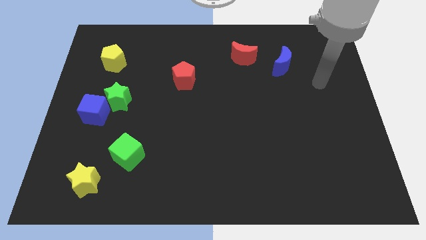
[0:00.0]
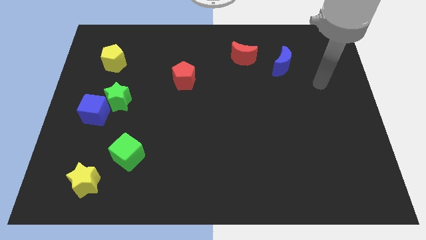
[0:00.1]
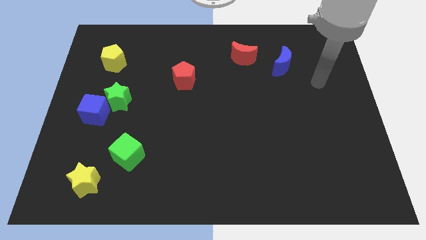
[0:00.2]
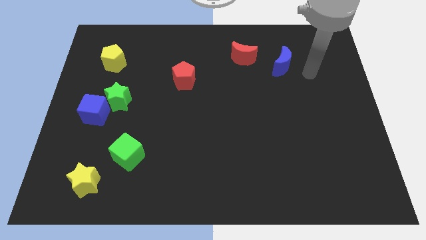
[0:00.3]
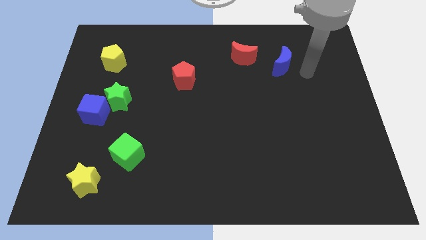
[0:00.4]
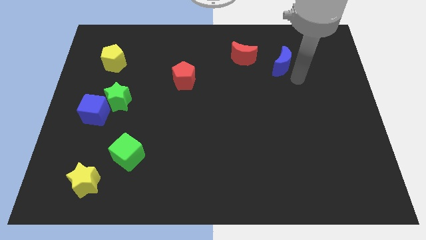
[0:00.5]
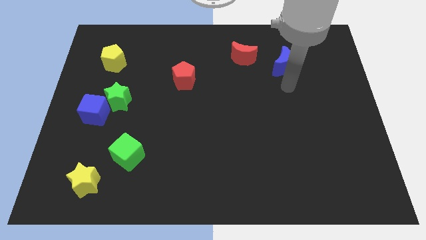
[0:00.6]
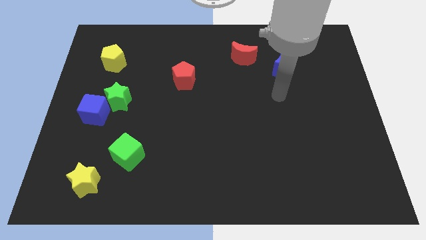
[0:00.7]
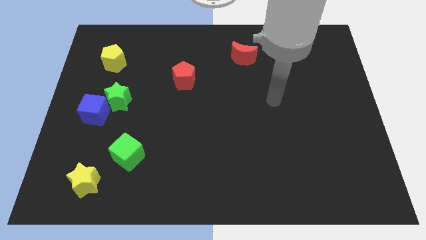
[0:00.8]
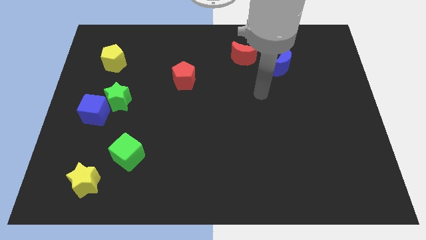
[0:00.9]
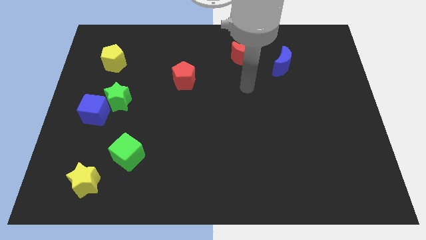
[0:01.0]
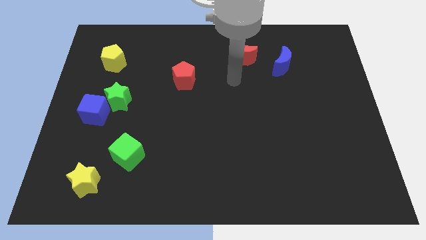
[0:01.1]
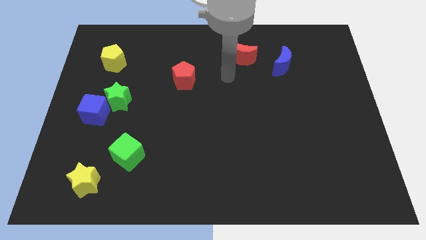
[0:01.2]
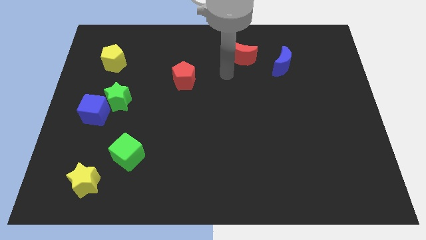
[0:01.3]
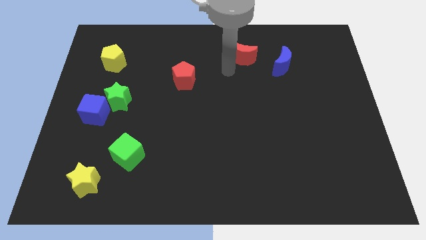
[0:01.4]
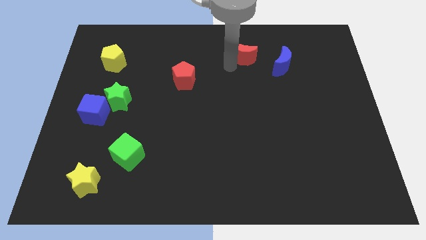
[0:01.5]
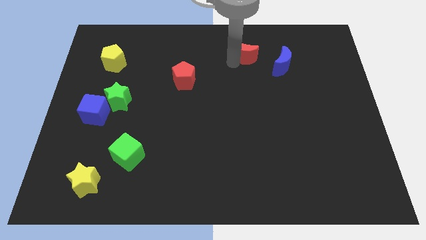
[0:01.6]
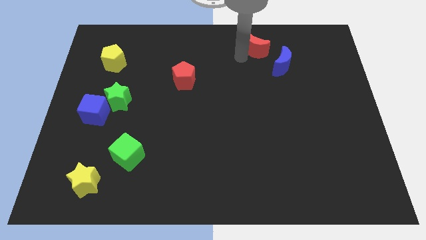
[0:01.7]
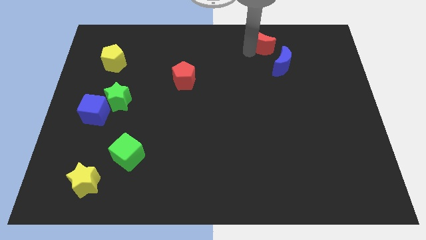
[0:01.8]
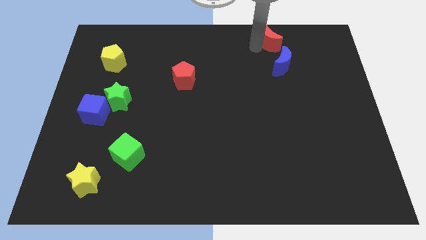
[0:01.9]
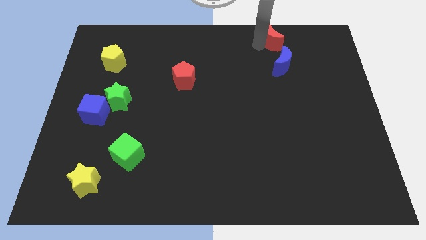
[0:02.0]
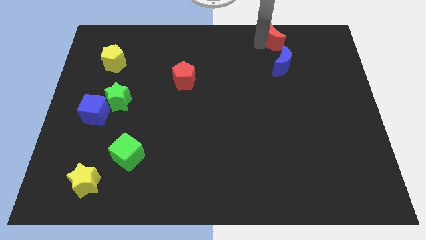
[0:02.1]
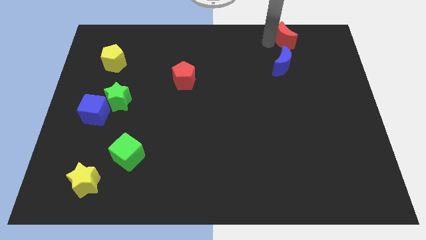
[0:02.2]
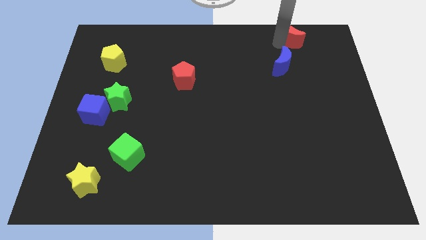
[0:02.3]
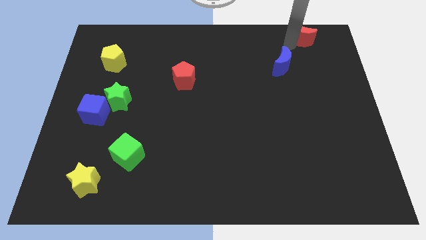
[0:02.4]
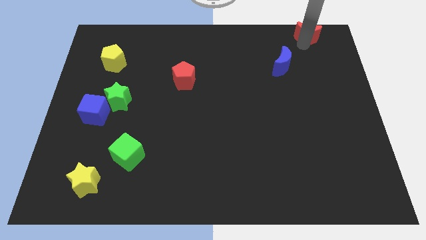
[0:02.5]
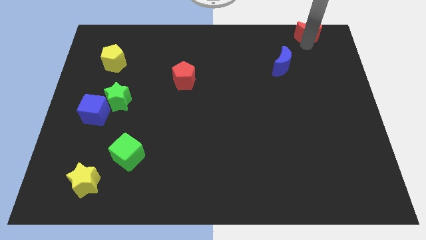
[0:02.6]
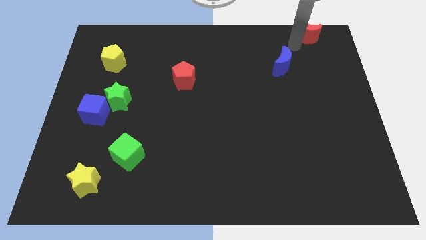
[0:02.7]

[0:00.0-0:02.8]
push the red moon near to the top right side of the blue moon

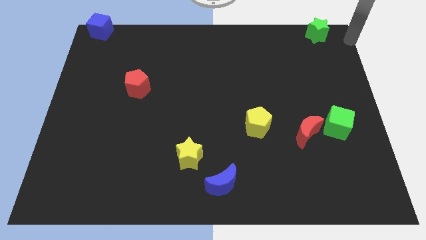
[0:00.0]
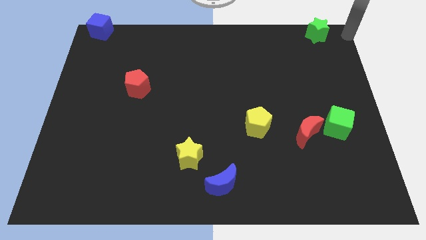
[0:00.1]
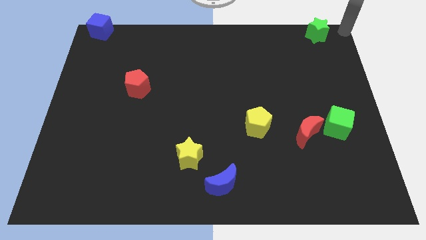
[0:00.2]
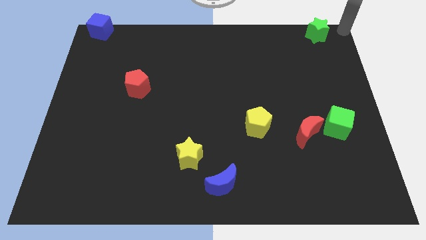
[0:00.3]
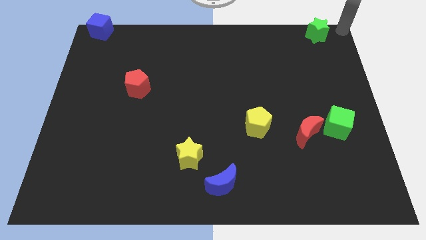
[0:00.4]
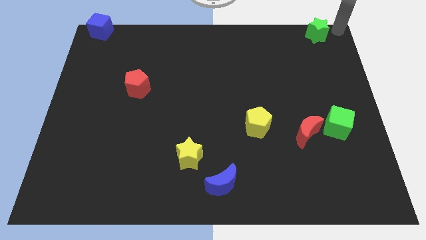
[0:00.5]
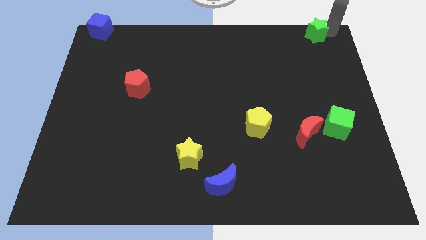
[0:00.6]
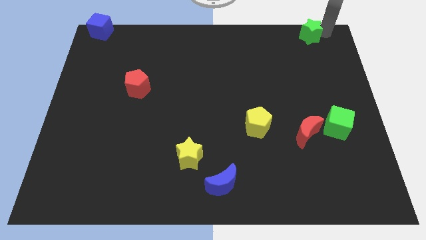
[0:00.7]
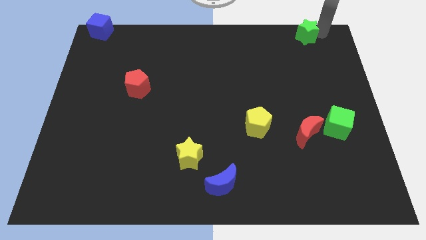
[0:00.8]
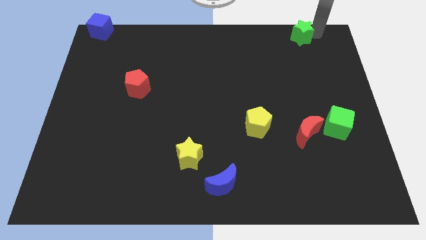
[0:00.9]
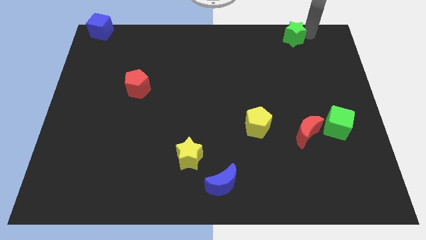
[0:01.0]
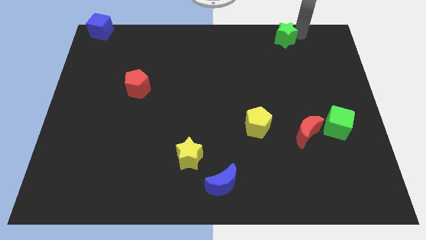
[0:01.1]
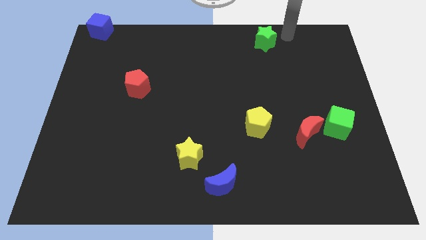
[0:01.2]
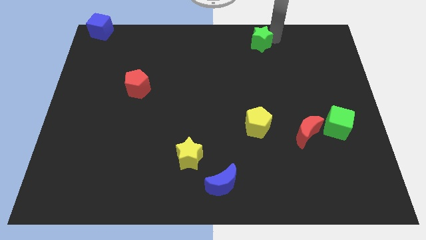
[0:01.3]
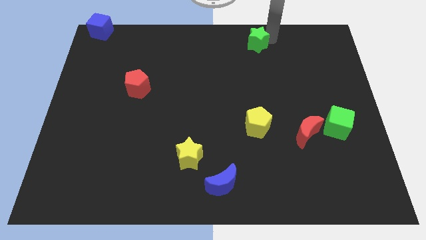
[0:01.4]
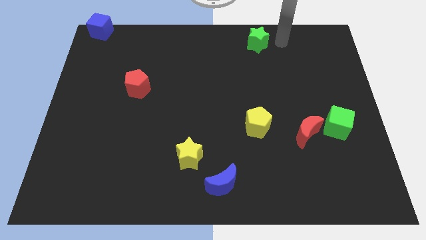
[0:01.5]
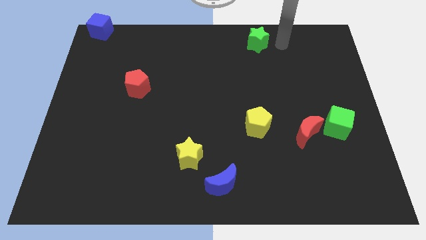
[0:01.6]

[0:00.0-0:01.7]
push green star above yellow pentagon

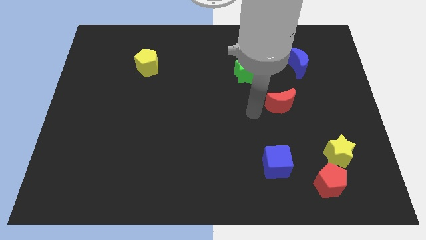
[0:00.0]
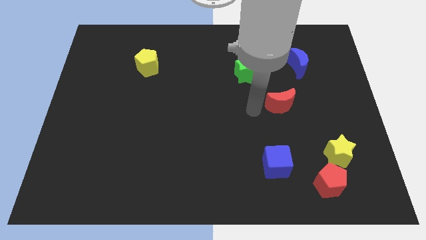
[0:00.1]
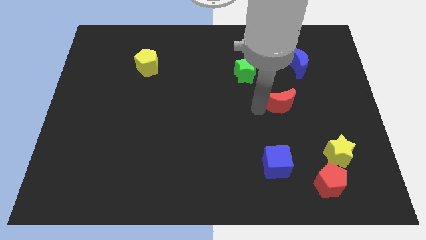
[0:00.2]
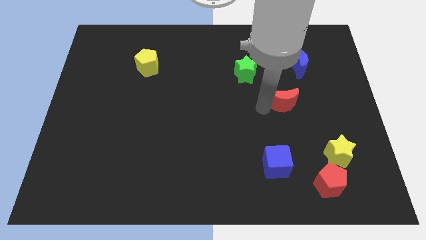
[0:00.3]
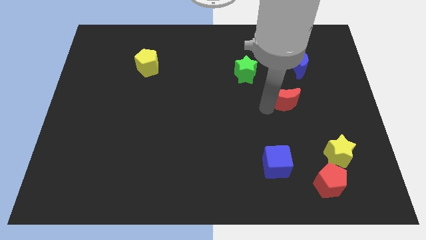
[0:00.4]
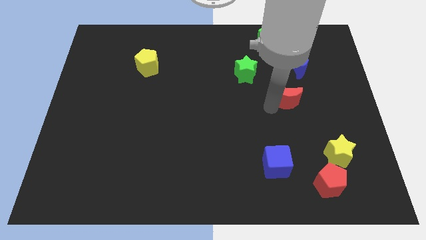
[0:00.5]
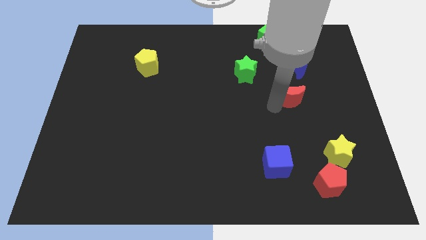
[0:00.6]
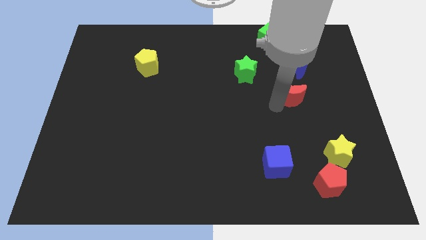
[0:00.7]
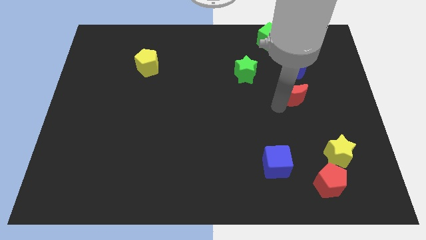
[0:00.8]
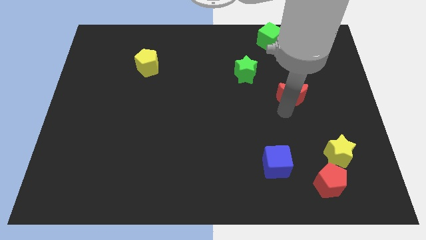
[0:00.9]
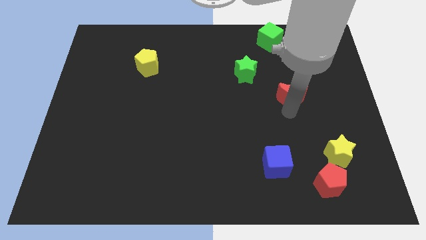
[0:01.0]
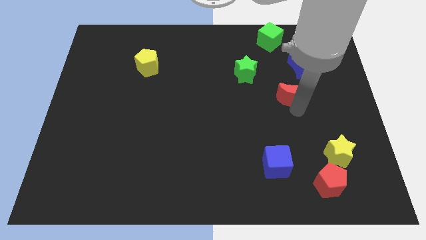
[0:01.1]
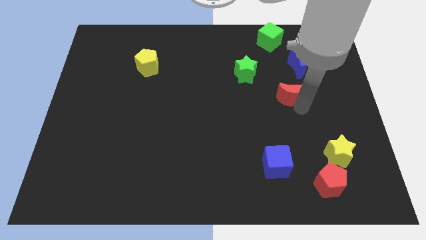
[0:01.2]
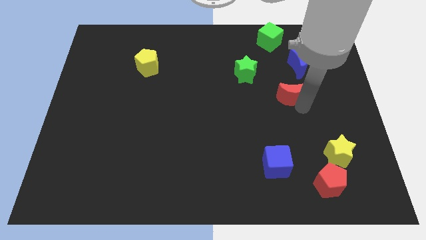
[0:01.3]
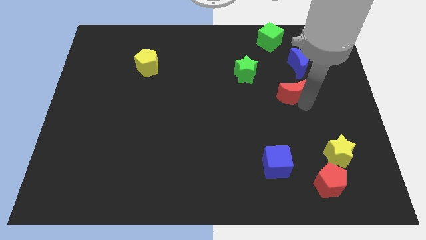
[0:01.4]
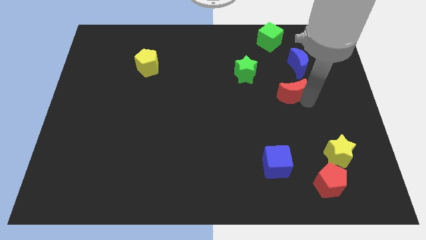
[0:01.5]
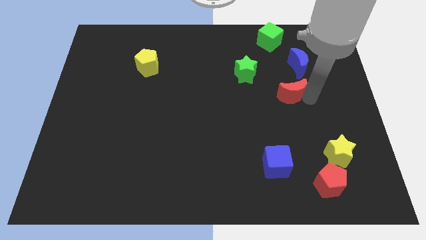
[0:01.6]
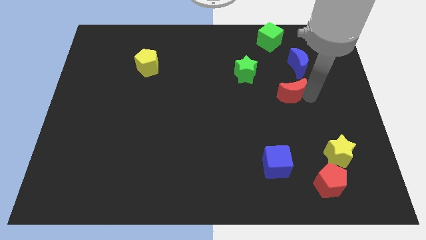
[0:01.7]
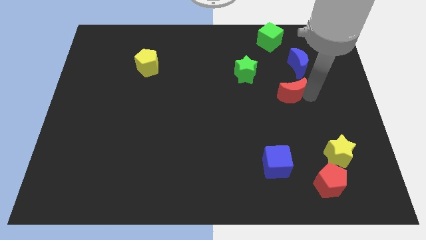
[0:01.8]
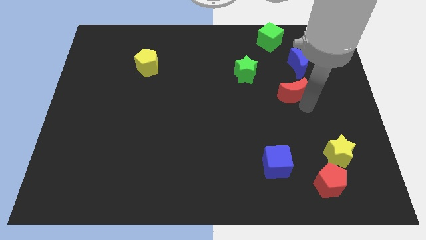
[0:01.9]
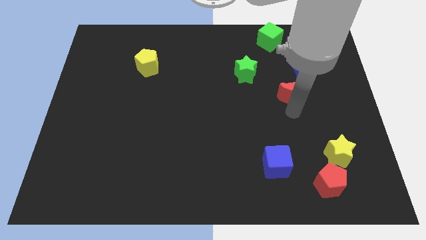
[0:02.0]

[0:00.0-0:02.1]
move the red moon near to the blue moon

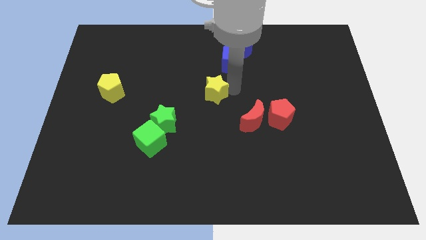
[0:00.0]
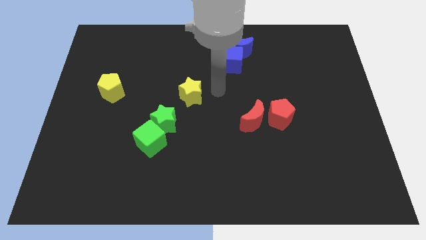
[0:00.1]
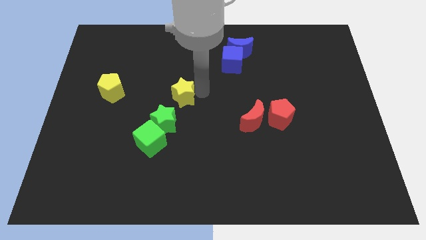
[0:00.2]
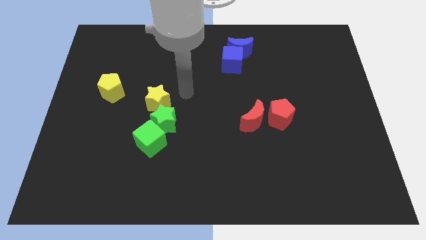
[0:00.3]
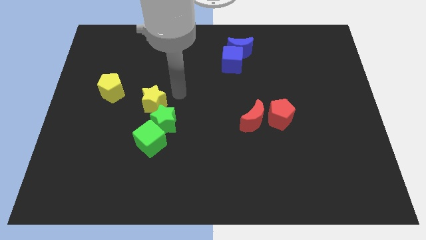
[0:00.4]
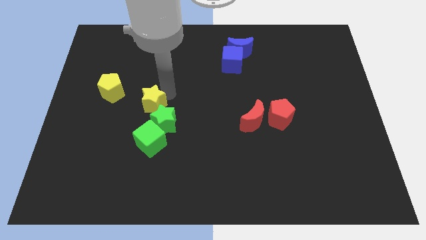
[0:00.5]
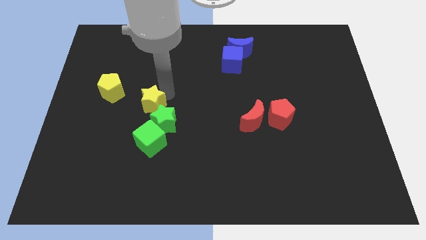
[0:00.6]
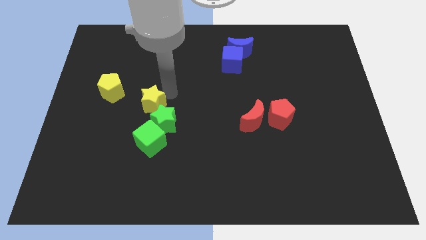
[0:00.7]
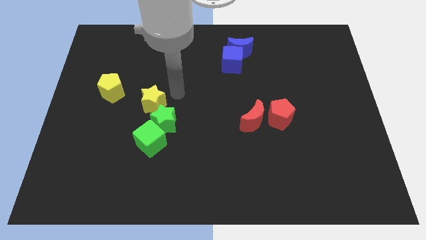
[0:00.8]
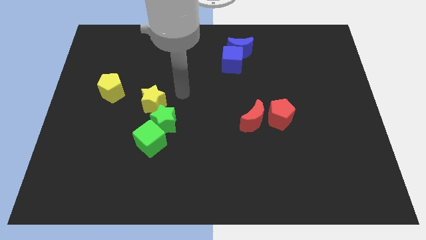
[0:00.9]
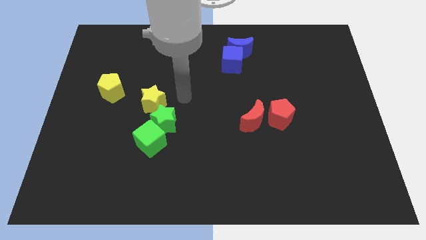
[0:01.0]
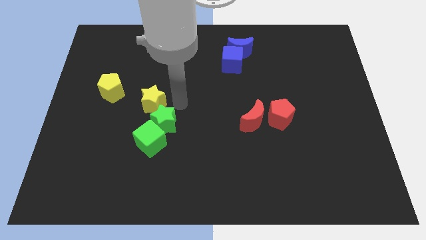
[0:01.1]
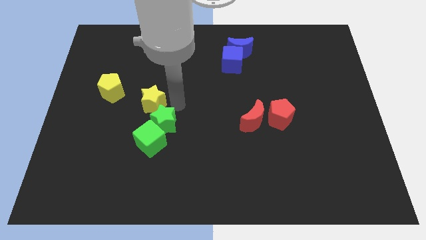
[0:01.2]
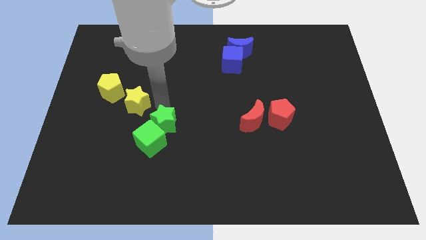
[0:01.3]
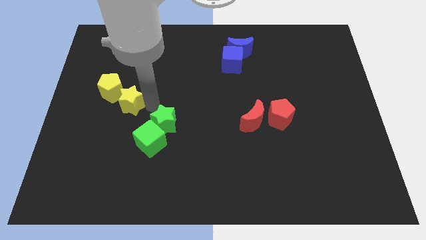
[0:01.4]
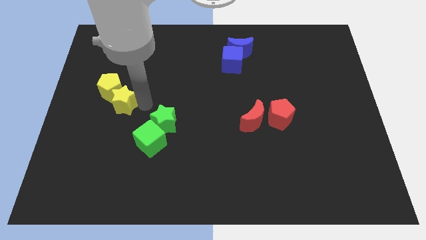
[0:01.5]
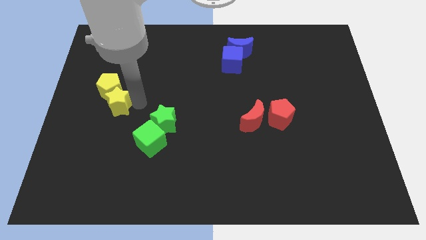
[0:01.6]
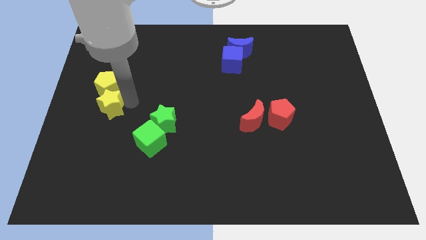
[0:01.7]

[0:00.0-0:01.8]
push the yellow star into the yellow pentagon

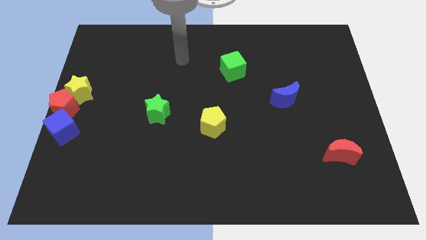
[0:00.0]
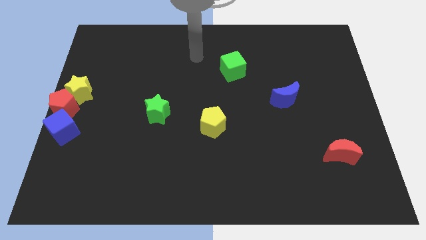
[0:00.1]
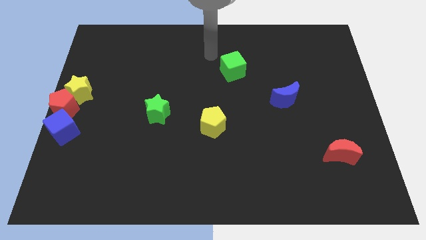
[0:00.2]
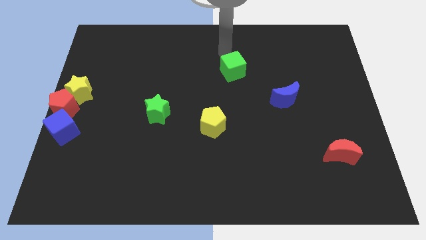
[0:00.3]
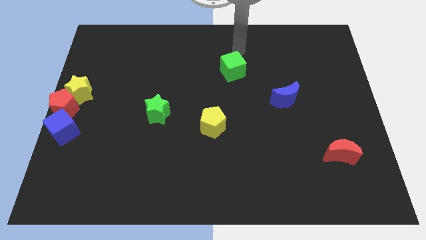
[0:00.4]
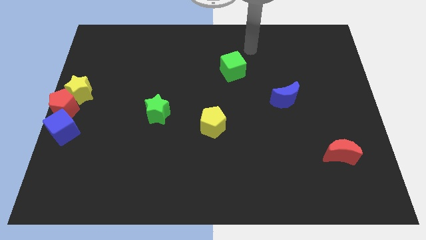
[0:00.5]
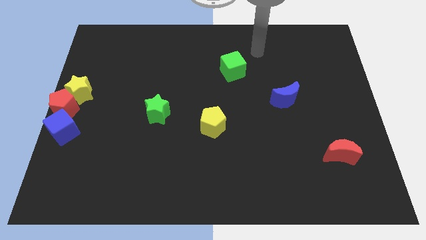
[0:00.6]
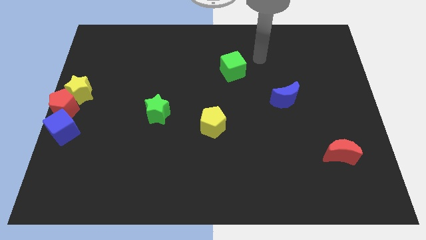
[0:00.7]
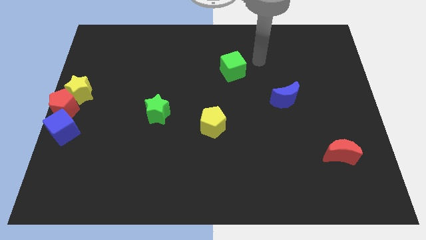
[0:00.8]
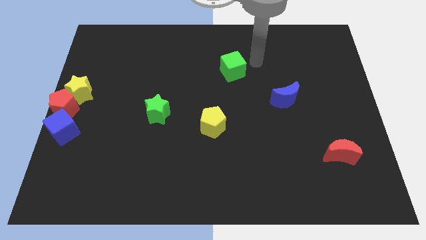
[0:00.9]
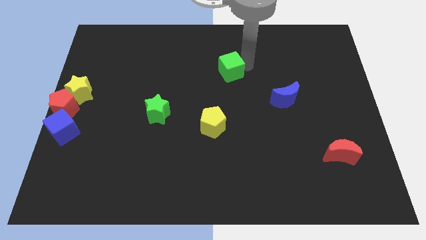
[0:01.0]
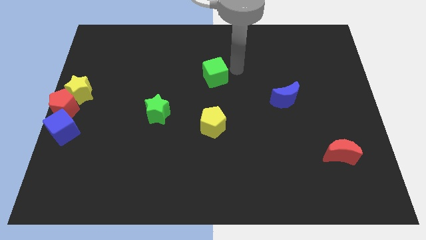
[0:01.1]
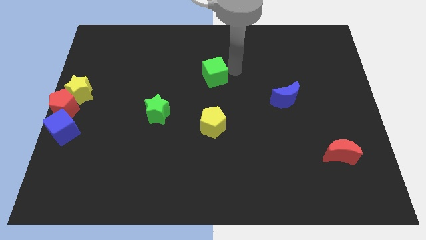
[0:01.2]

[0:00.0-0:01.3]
place the green cube above the yellow pentagon
